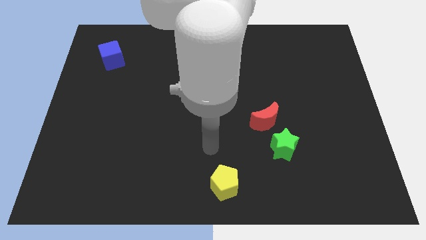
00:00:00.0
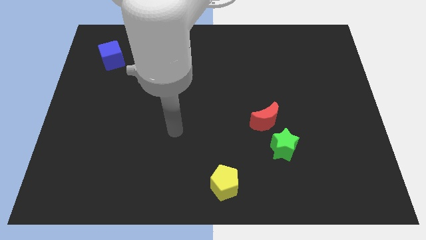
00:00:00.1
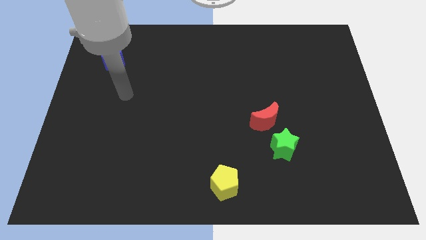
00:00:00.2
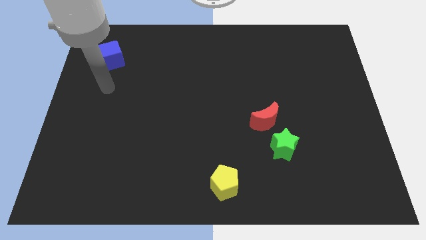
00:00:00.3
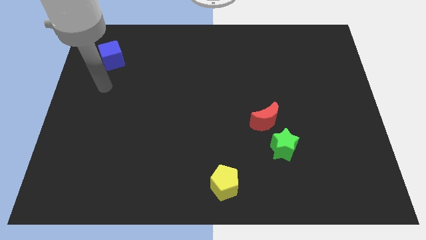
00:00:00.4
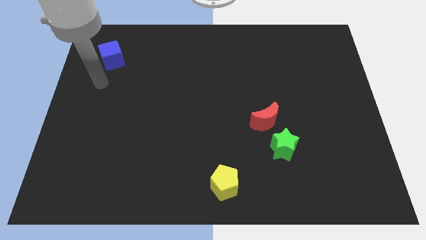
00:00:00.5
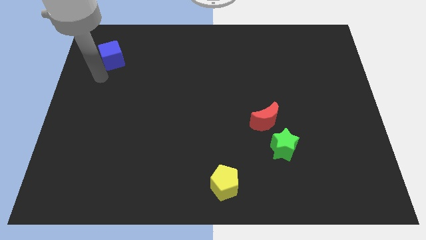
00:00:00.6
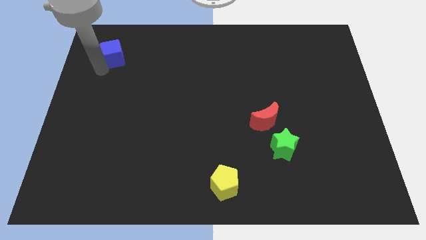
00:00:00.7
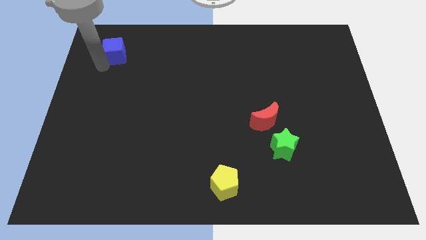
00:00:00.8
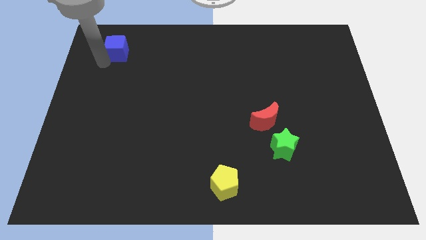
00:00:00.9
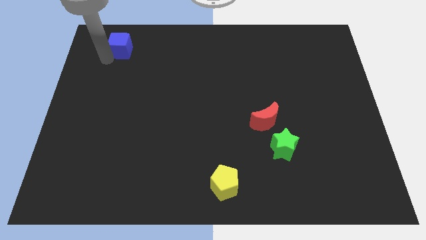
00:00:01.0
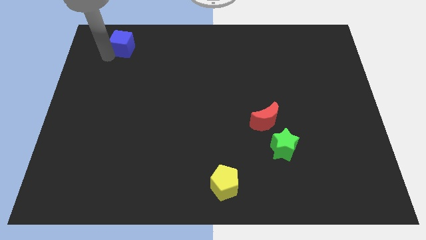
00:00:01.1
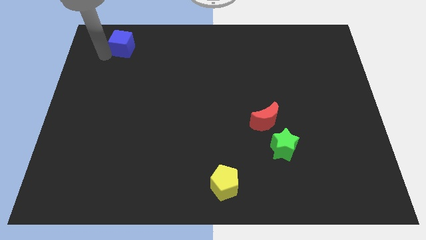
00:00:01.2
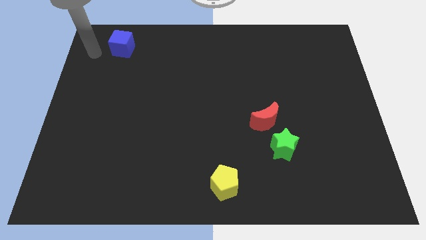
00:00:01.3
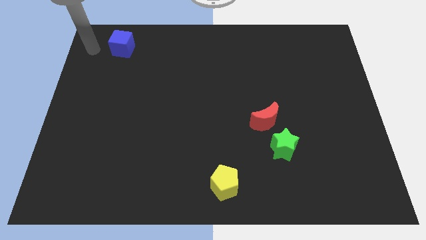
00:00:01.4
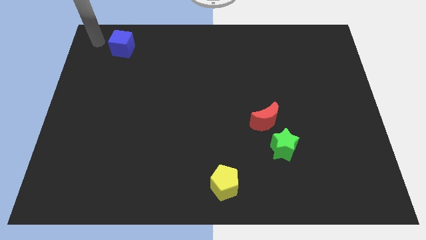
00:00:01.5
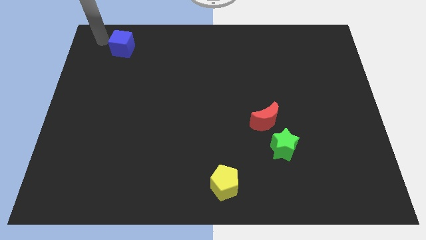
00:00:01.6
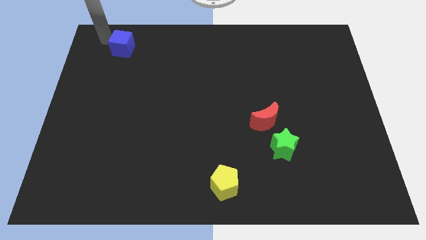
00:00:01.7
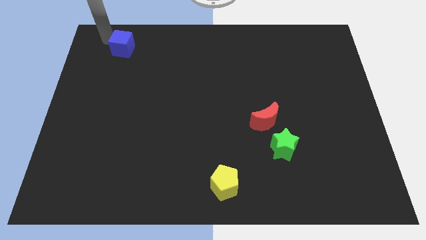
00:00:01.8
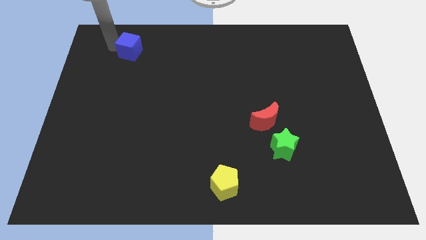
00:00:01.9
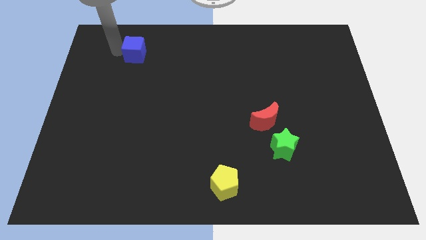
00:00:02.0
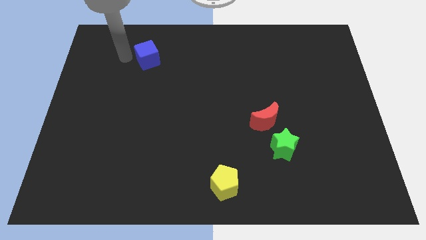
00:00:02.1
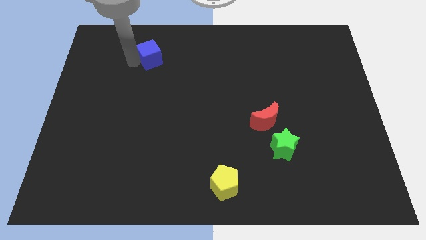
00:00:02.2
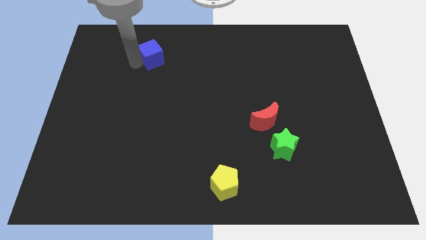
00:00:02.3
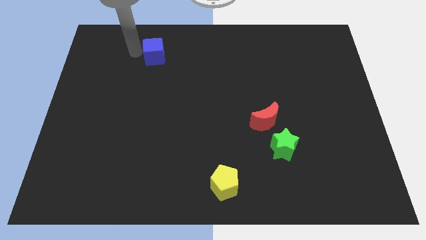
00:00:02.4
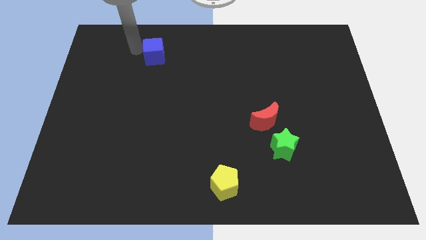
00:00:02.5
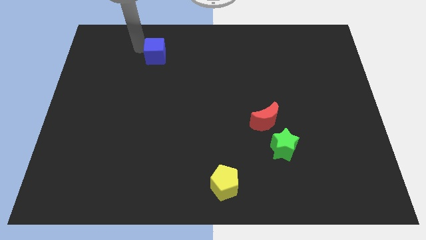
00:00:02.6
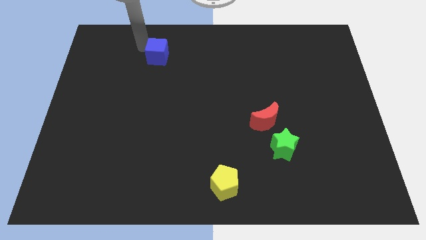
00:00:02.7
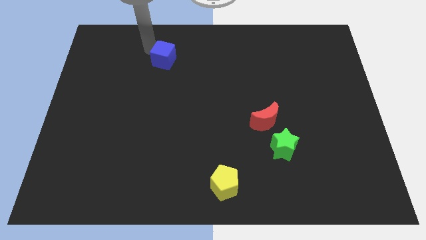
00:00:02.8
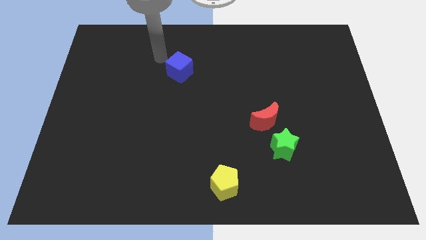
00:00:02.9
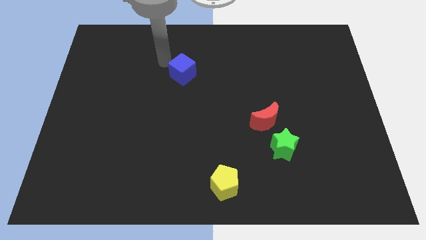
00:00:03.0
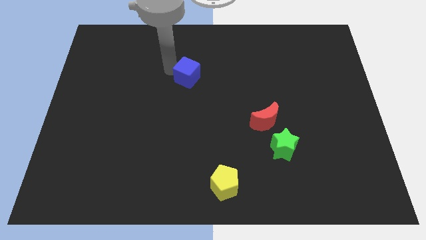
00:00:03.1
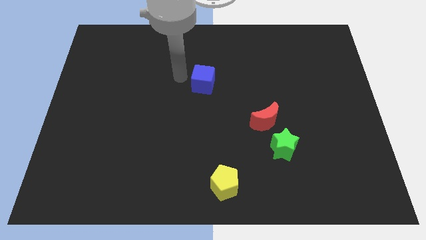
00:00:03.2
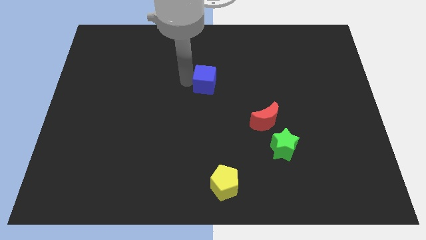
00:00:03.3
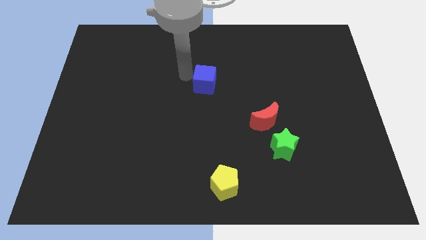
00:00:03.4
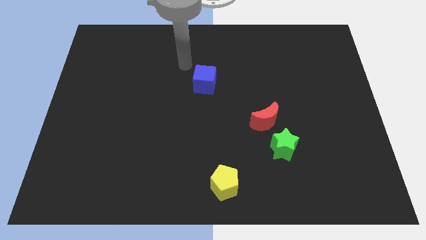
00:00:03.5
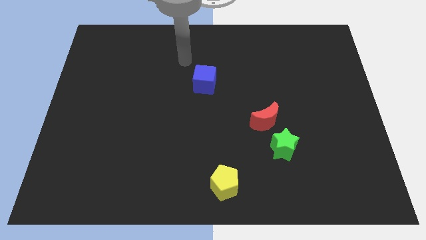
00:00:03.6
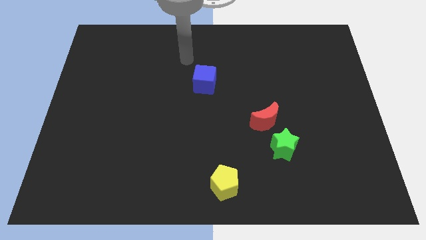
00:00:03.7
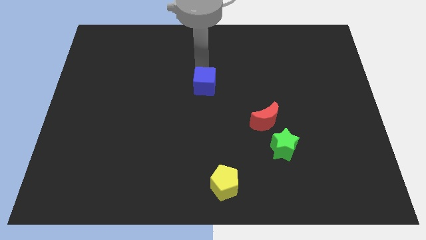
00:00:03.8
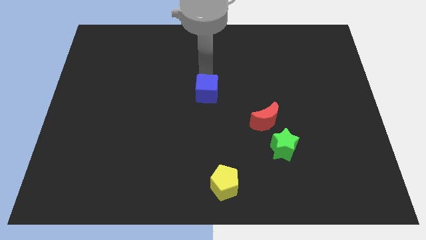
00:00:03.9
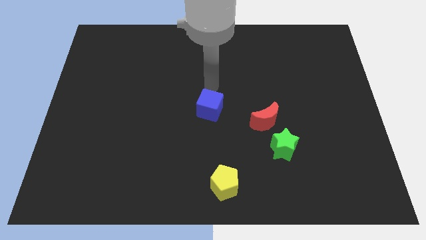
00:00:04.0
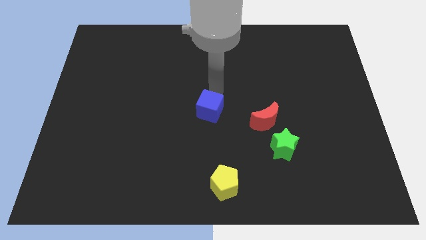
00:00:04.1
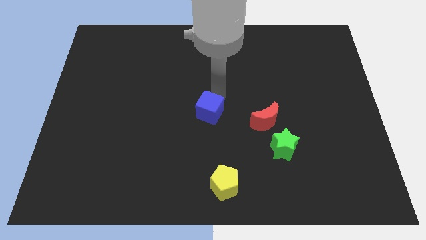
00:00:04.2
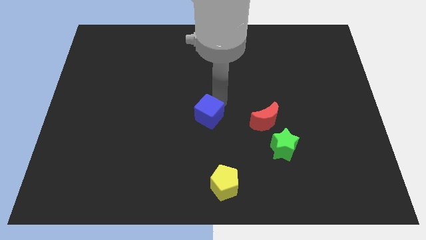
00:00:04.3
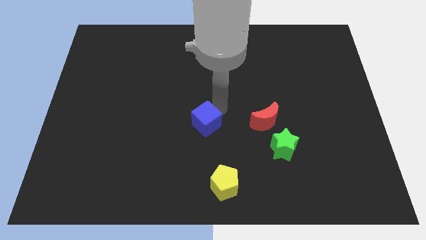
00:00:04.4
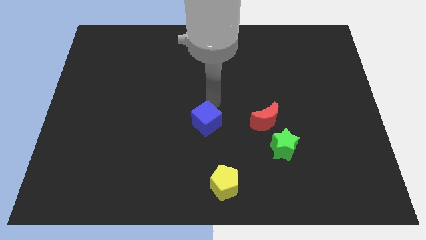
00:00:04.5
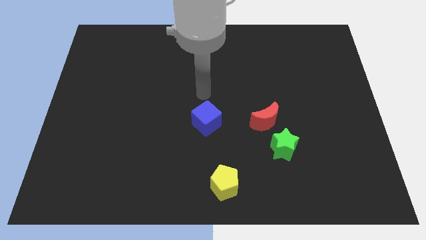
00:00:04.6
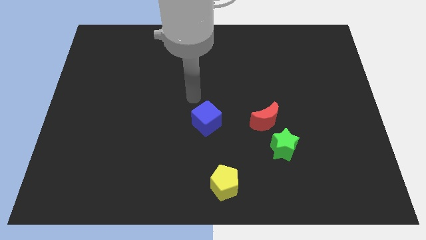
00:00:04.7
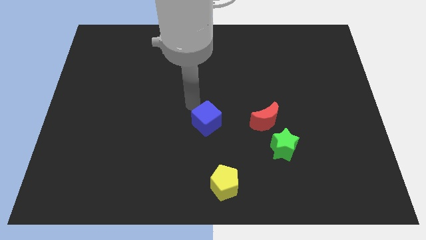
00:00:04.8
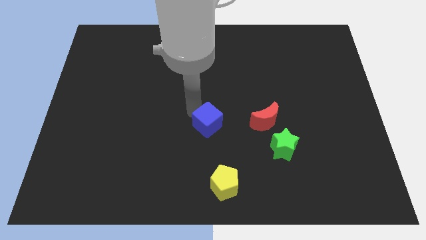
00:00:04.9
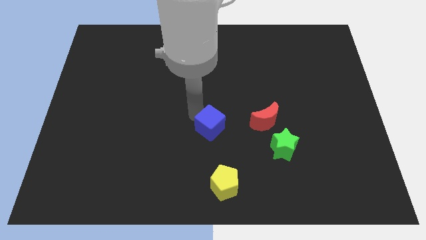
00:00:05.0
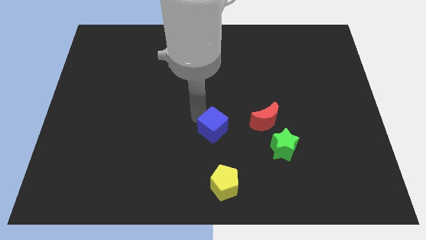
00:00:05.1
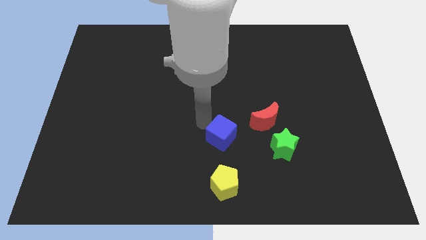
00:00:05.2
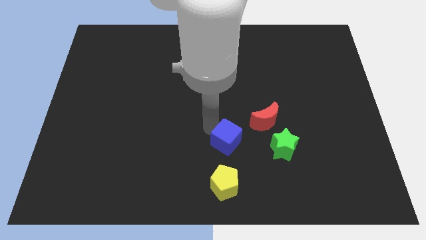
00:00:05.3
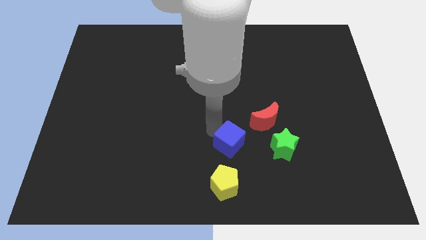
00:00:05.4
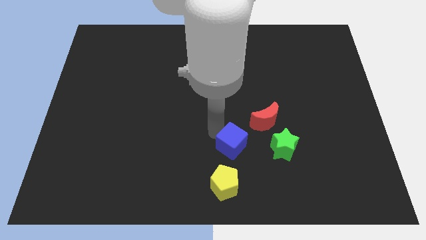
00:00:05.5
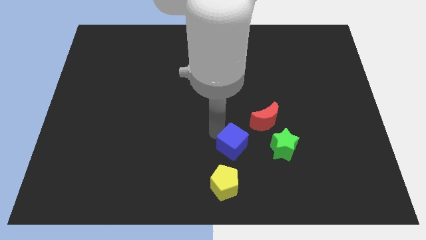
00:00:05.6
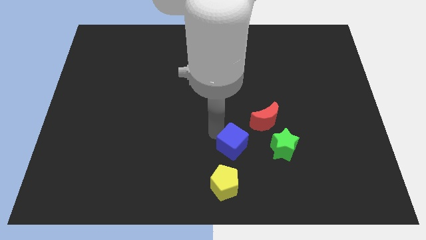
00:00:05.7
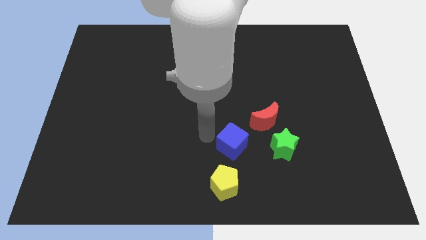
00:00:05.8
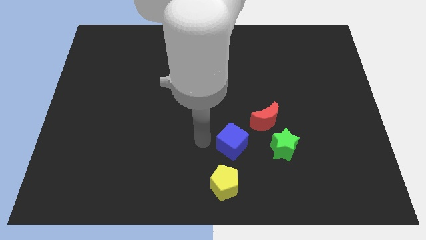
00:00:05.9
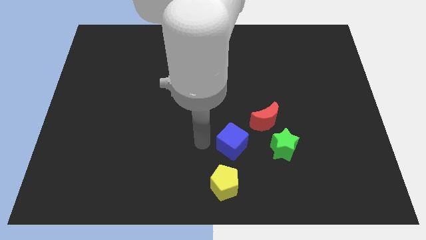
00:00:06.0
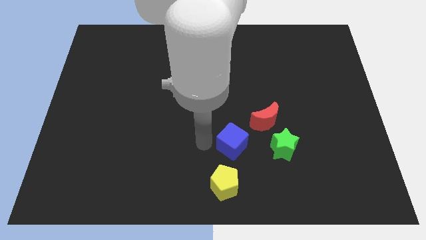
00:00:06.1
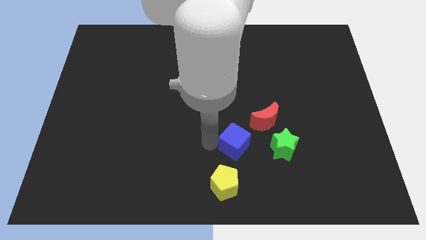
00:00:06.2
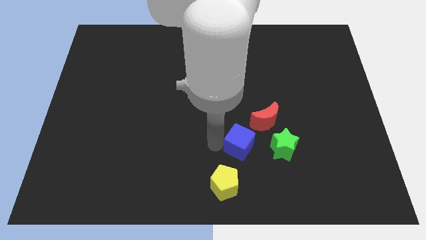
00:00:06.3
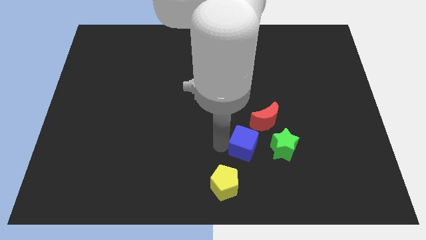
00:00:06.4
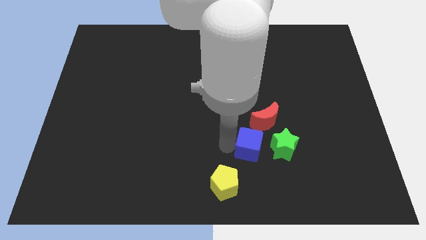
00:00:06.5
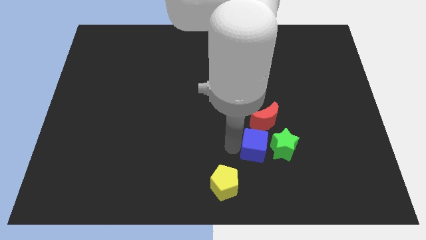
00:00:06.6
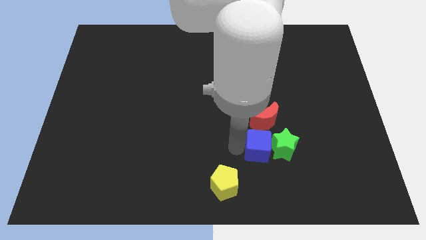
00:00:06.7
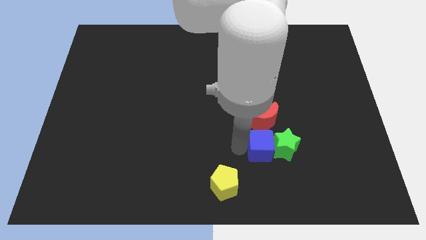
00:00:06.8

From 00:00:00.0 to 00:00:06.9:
move the cube towards the star

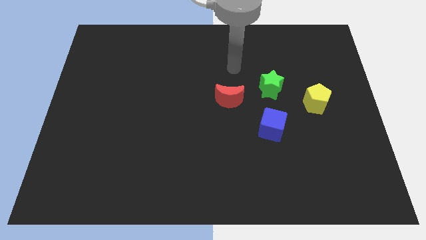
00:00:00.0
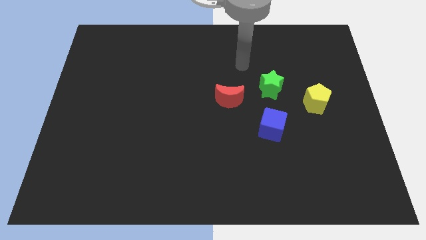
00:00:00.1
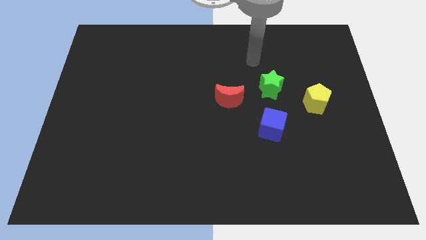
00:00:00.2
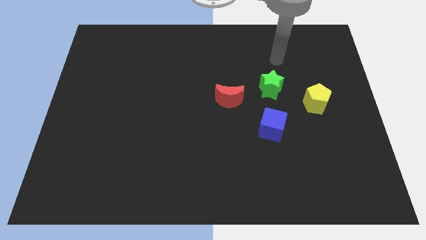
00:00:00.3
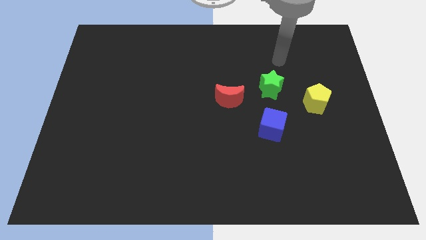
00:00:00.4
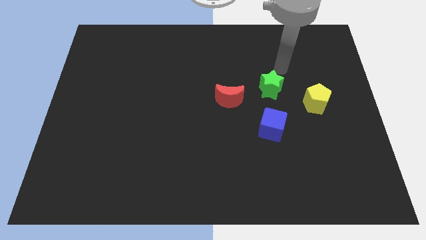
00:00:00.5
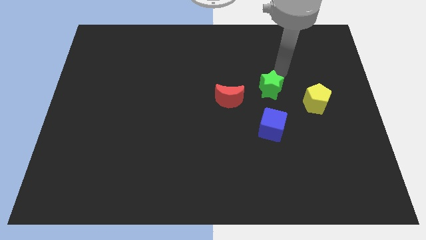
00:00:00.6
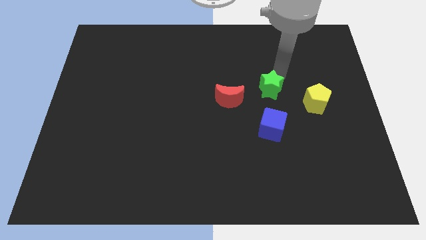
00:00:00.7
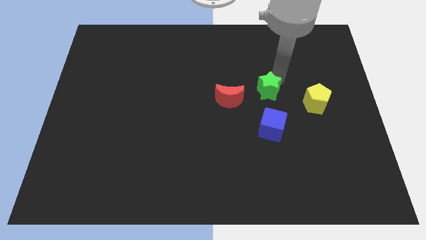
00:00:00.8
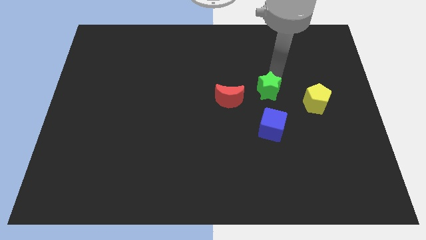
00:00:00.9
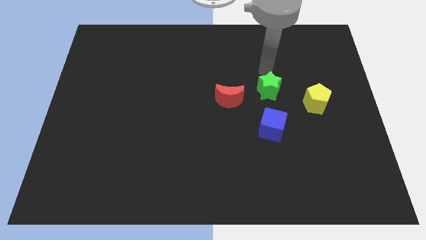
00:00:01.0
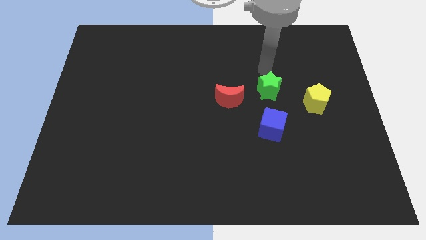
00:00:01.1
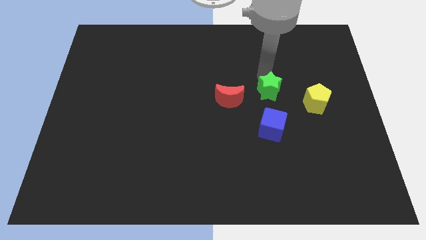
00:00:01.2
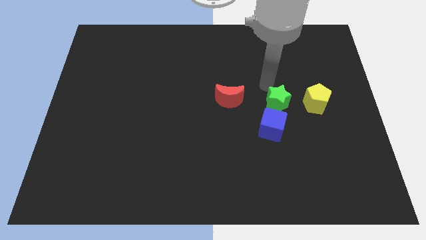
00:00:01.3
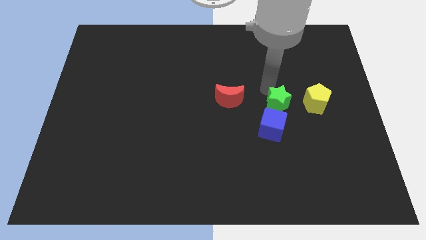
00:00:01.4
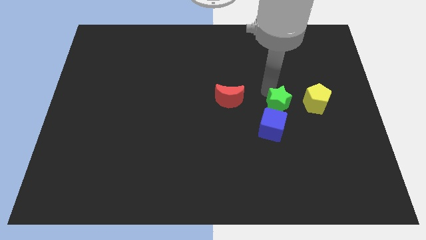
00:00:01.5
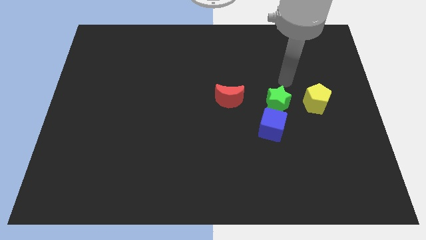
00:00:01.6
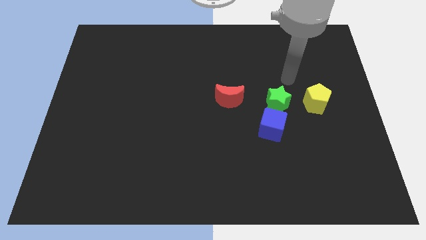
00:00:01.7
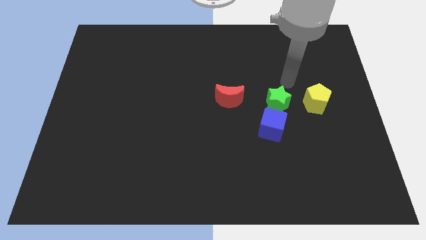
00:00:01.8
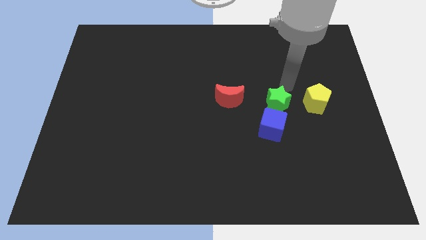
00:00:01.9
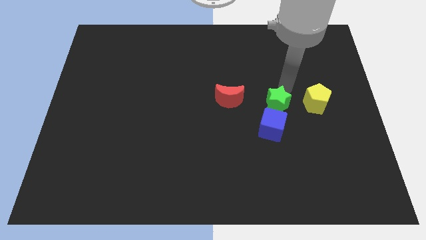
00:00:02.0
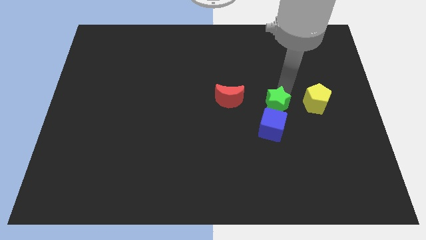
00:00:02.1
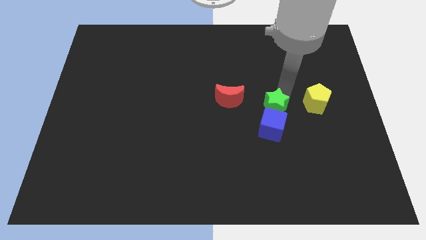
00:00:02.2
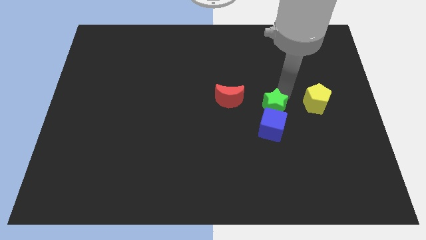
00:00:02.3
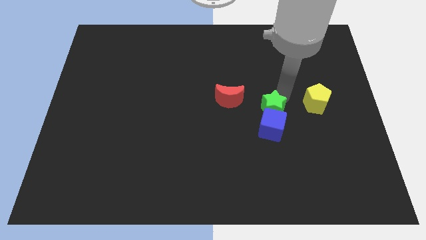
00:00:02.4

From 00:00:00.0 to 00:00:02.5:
move the star towards the cube
